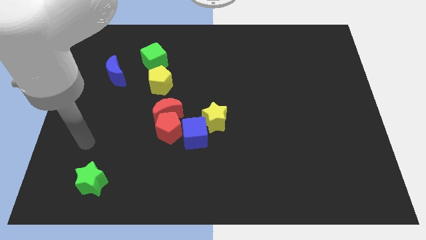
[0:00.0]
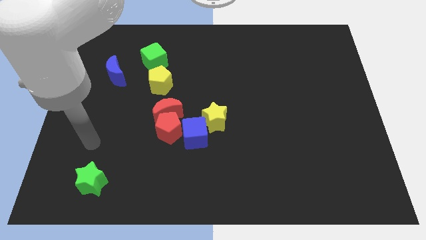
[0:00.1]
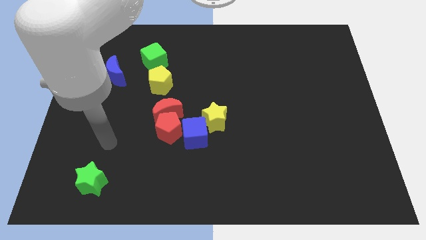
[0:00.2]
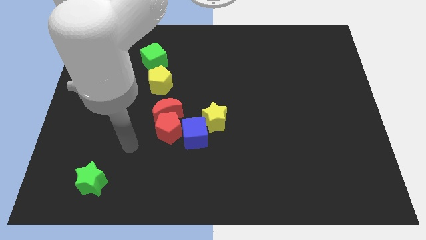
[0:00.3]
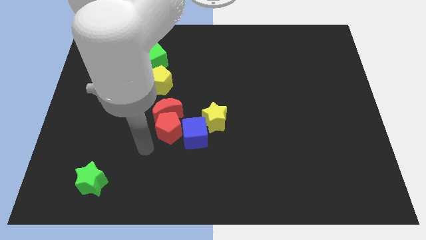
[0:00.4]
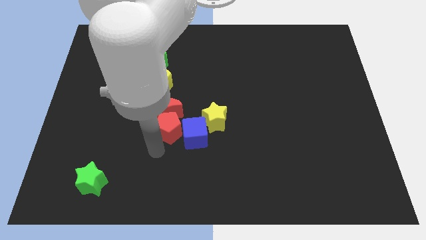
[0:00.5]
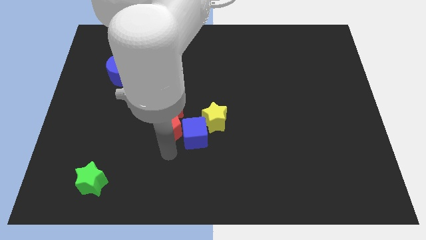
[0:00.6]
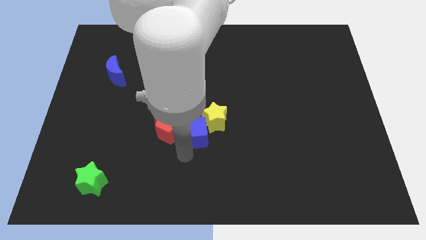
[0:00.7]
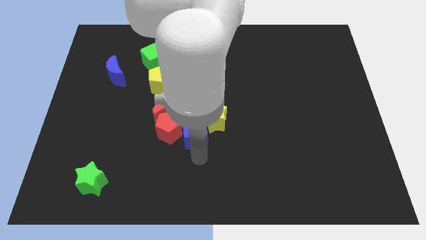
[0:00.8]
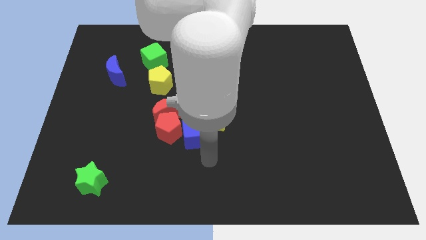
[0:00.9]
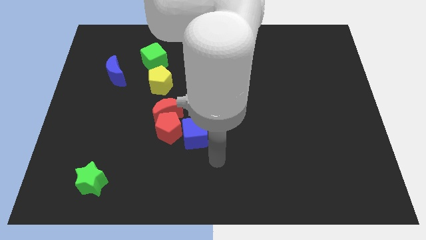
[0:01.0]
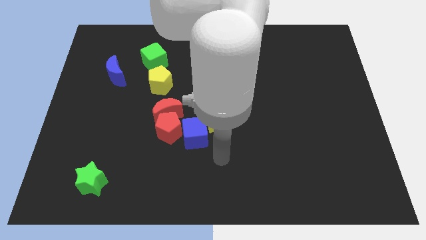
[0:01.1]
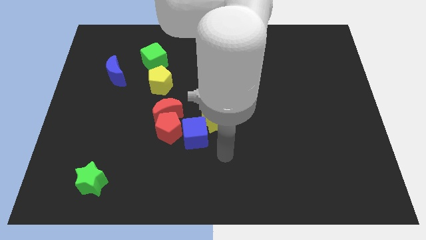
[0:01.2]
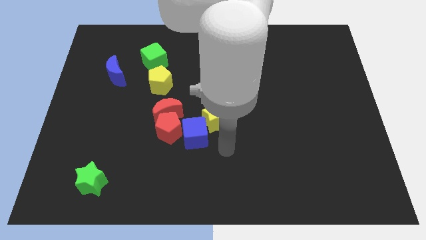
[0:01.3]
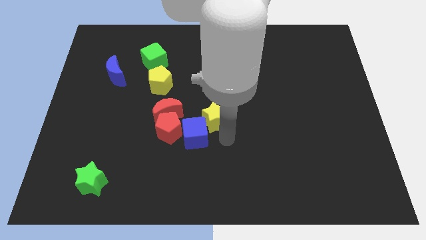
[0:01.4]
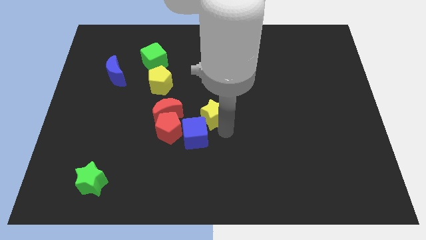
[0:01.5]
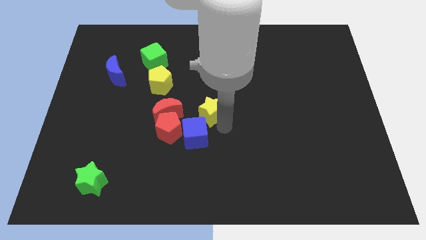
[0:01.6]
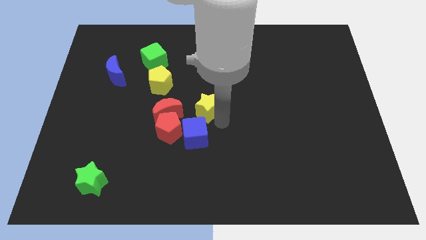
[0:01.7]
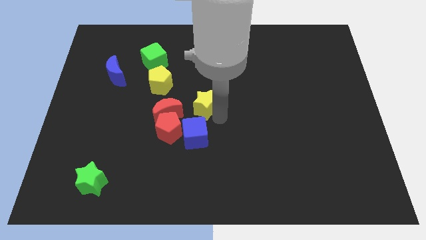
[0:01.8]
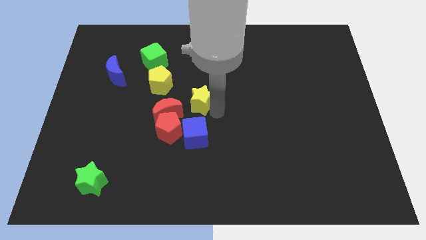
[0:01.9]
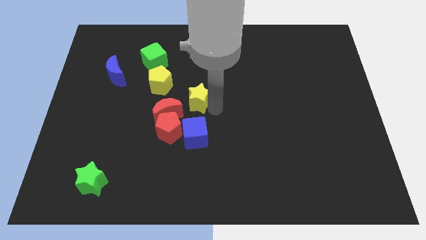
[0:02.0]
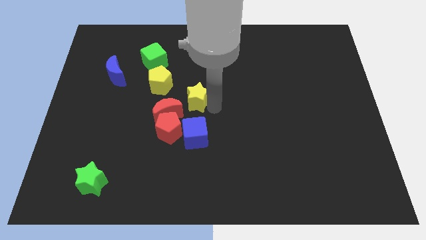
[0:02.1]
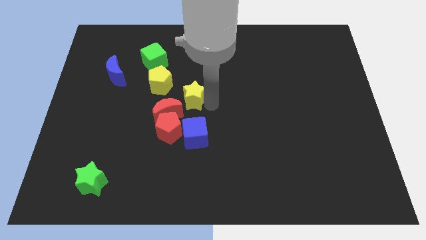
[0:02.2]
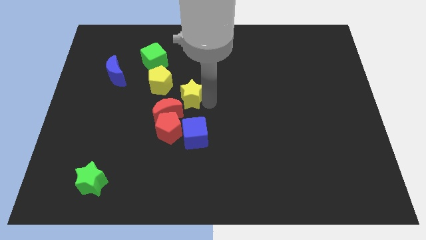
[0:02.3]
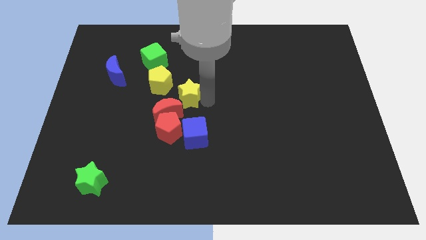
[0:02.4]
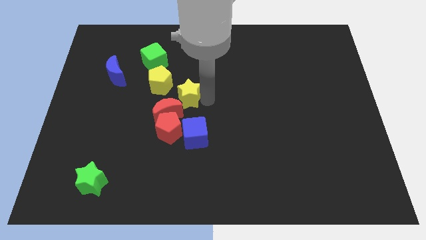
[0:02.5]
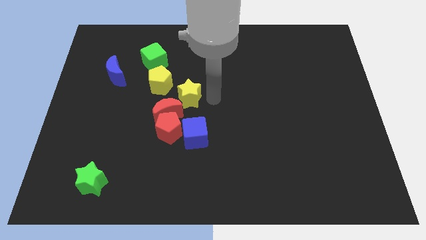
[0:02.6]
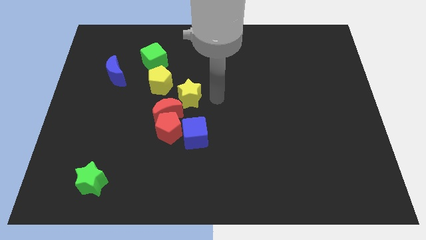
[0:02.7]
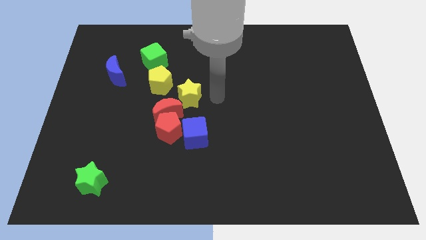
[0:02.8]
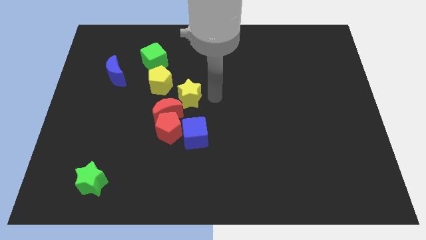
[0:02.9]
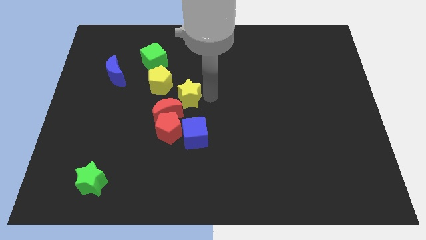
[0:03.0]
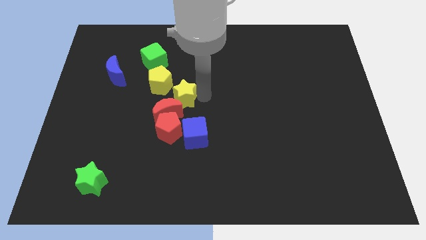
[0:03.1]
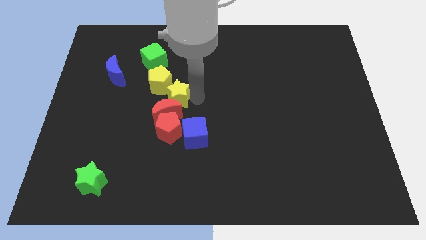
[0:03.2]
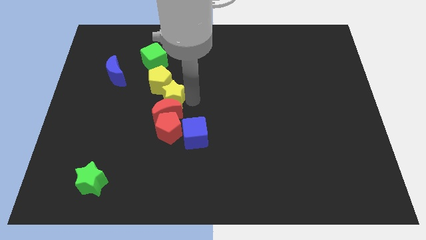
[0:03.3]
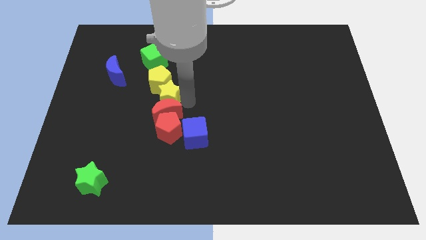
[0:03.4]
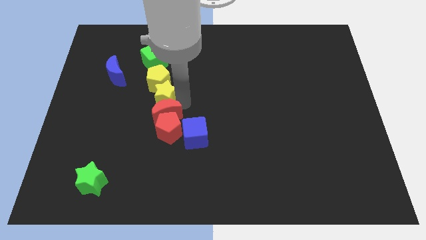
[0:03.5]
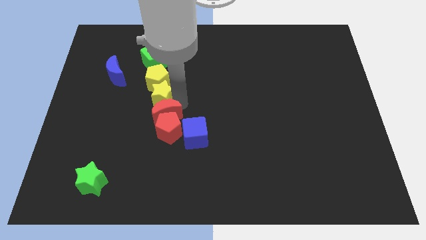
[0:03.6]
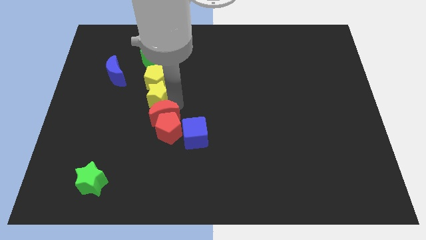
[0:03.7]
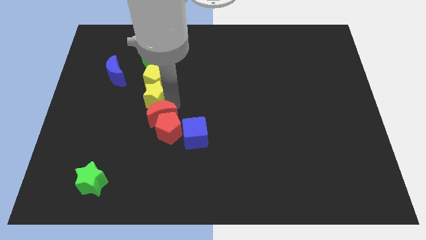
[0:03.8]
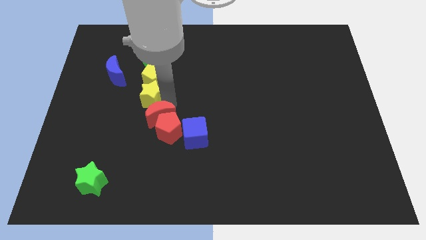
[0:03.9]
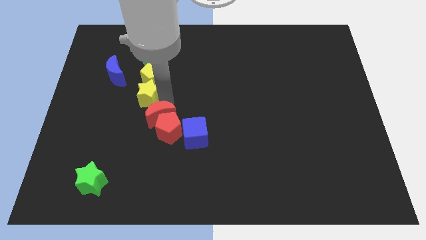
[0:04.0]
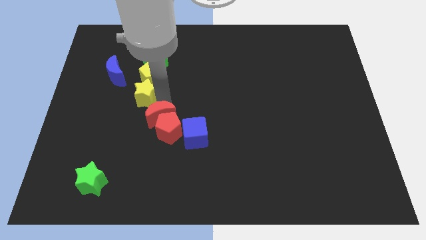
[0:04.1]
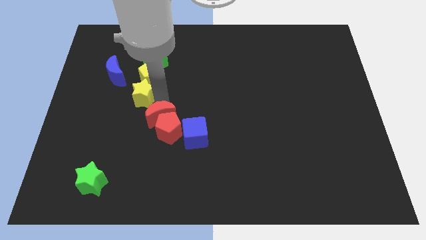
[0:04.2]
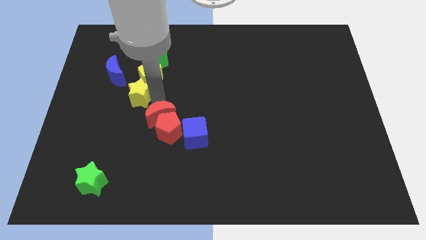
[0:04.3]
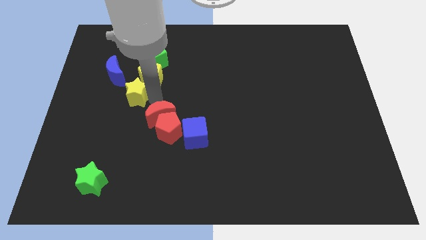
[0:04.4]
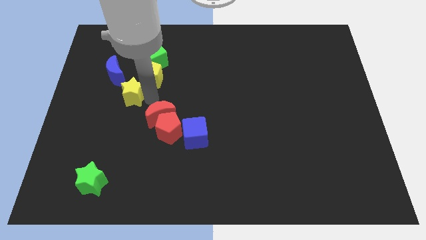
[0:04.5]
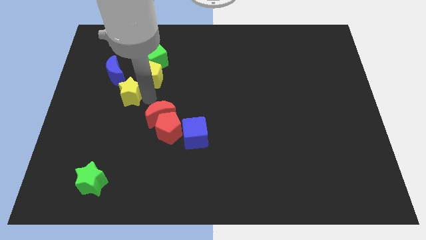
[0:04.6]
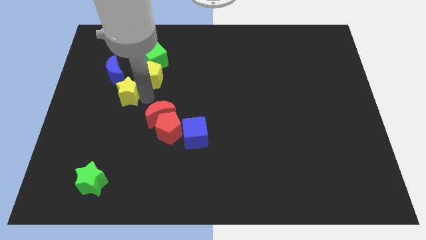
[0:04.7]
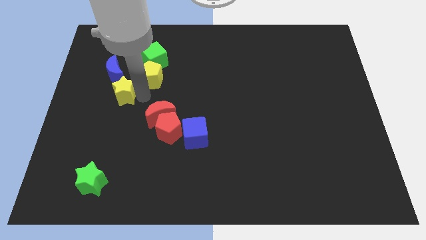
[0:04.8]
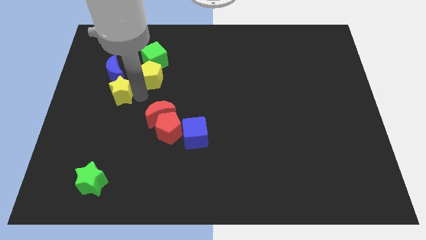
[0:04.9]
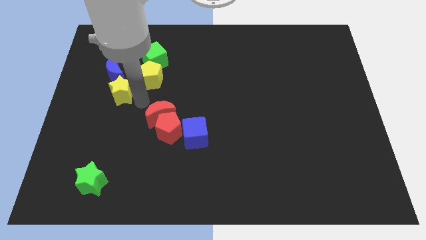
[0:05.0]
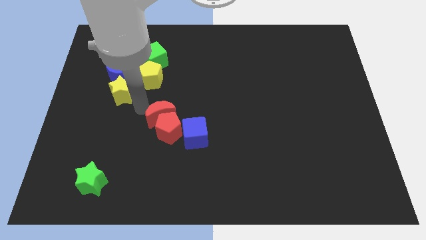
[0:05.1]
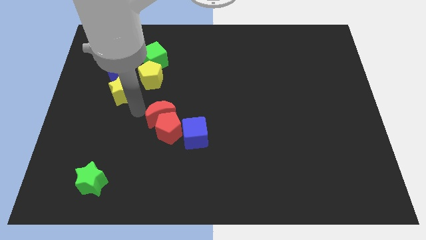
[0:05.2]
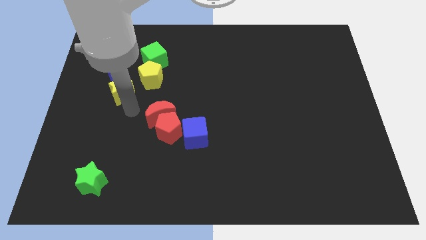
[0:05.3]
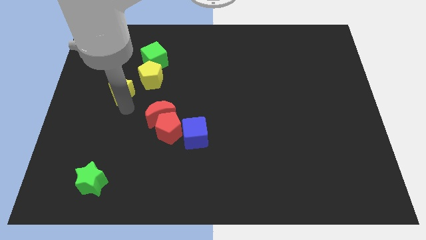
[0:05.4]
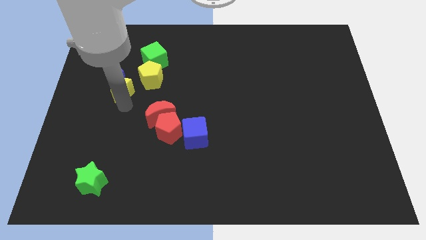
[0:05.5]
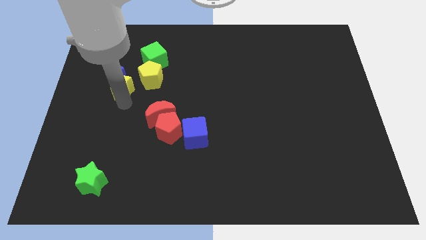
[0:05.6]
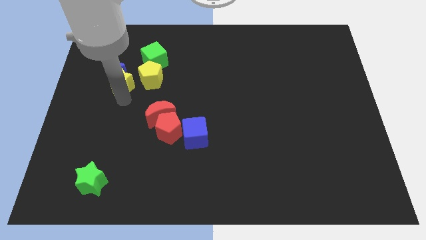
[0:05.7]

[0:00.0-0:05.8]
slide the yellow star close to the blue moon

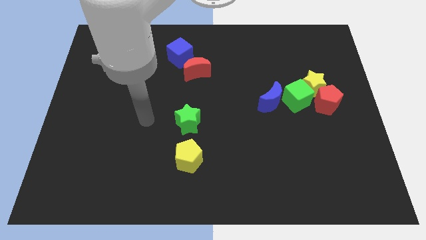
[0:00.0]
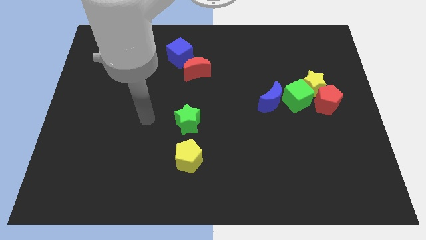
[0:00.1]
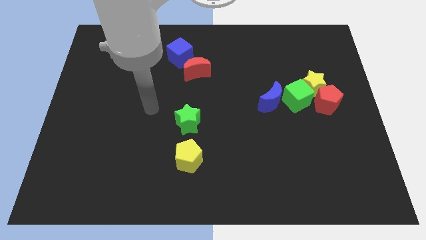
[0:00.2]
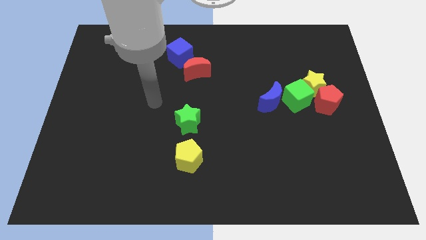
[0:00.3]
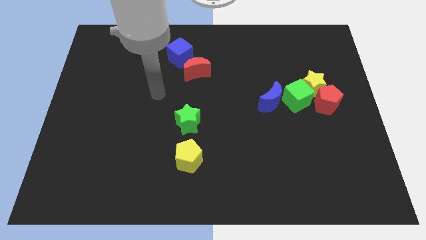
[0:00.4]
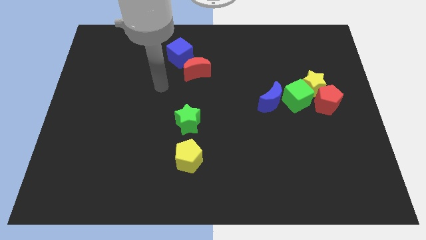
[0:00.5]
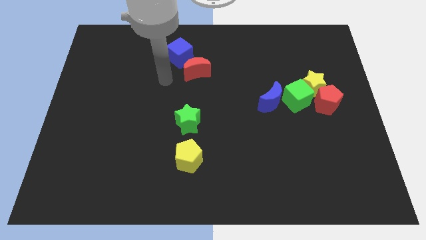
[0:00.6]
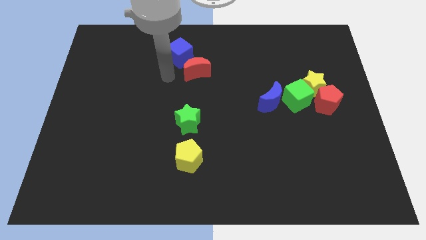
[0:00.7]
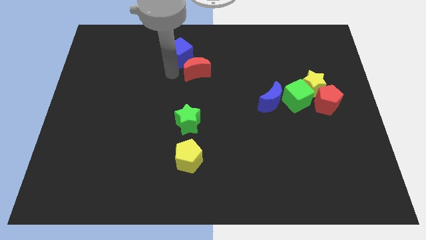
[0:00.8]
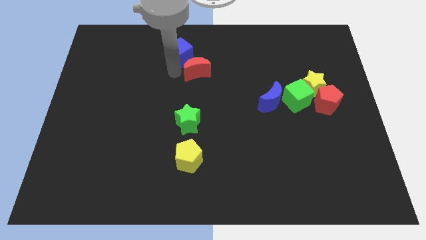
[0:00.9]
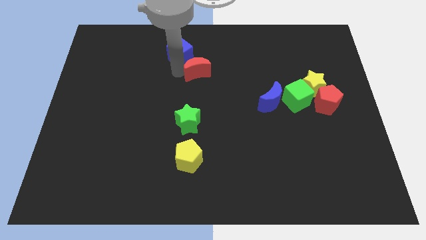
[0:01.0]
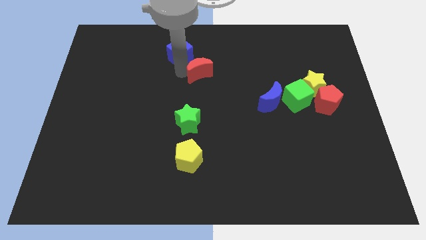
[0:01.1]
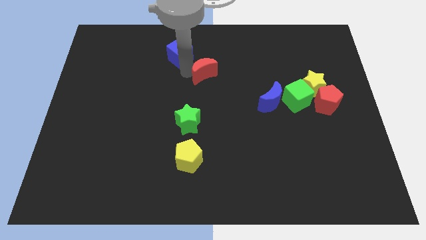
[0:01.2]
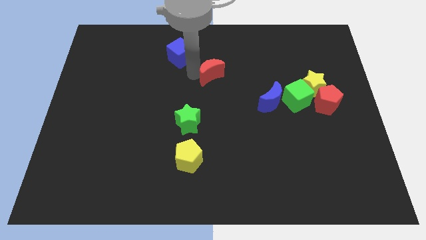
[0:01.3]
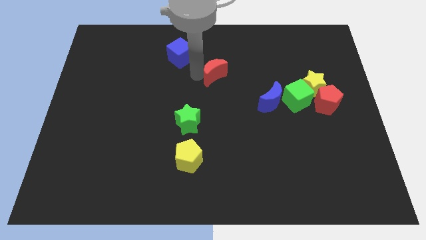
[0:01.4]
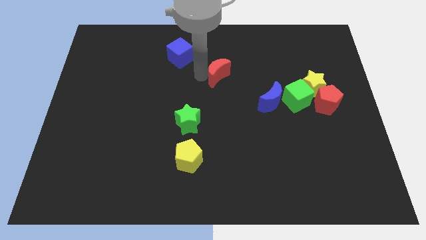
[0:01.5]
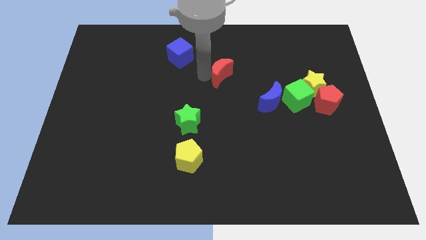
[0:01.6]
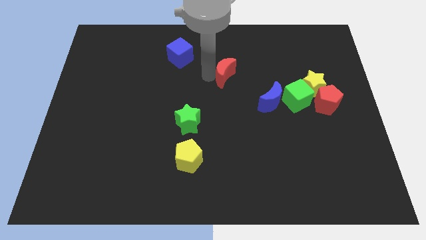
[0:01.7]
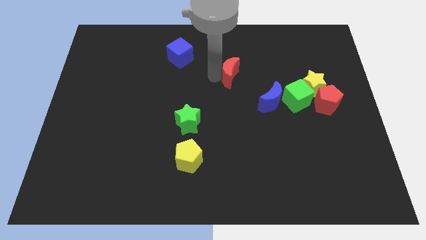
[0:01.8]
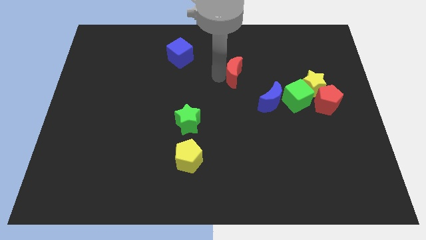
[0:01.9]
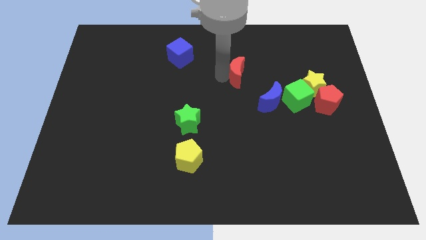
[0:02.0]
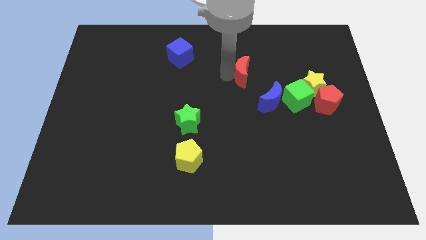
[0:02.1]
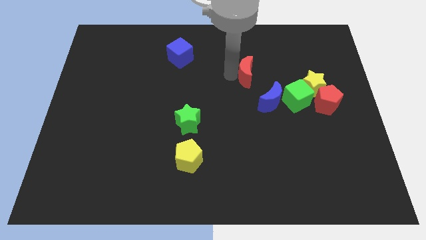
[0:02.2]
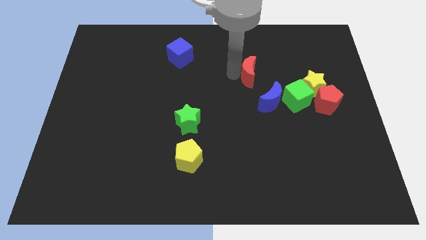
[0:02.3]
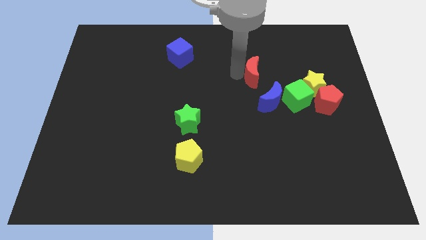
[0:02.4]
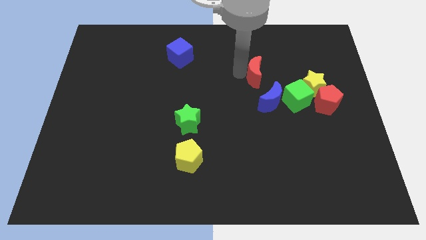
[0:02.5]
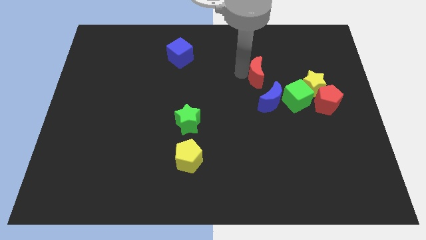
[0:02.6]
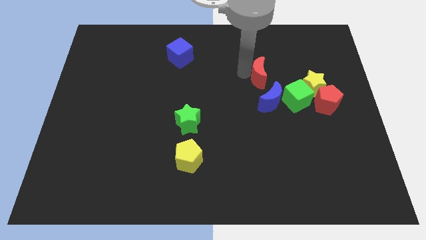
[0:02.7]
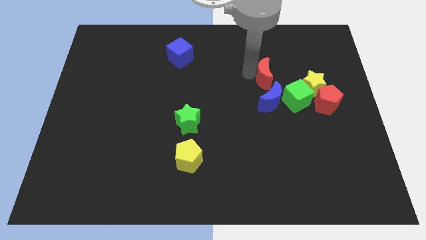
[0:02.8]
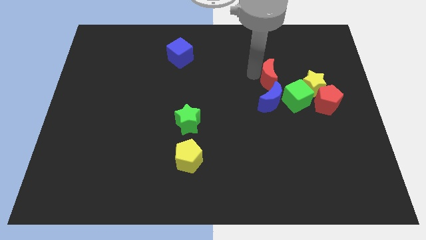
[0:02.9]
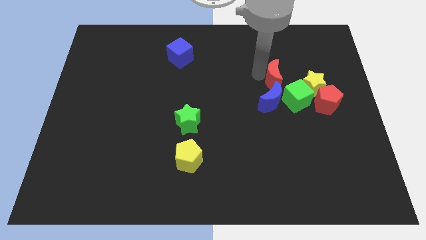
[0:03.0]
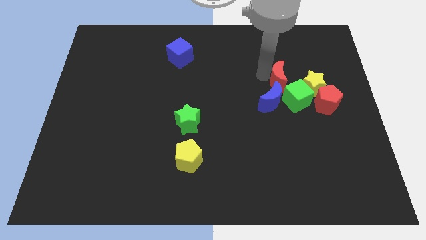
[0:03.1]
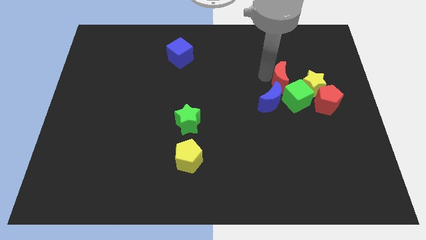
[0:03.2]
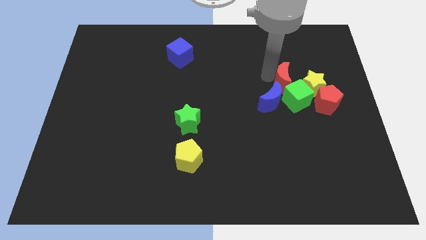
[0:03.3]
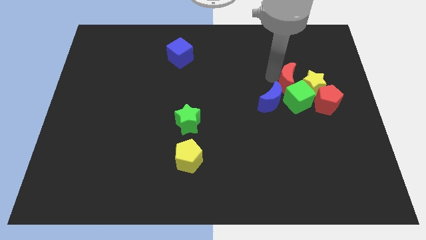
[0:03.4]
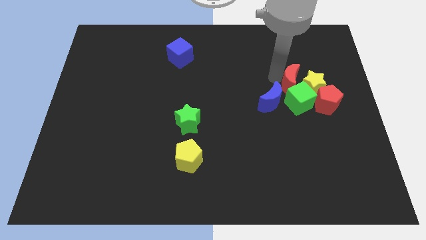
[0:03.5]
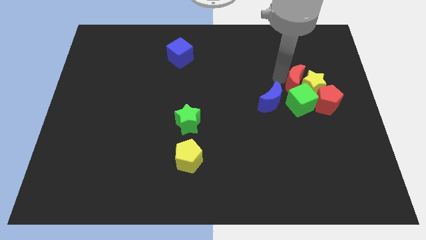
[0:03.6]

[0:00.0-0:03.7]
put the red moon to the yellow star
